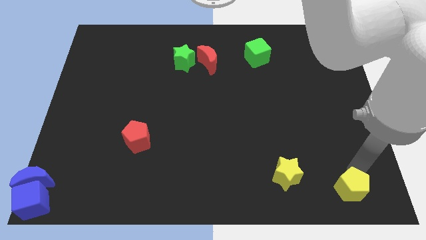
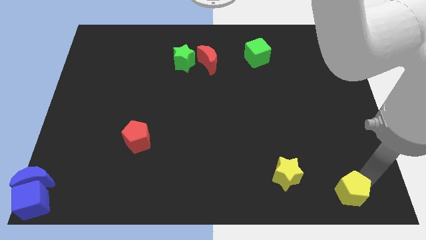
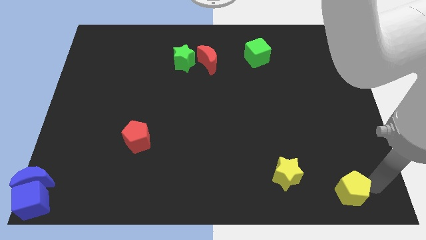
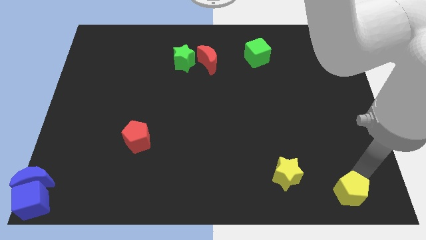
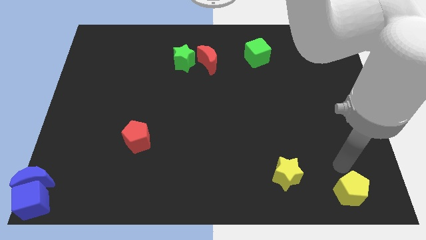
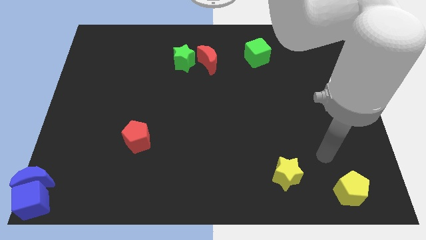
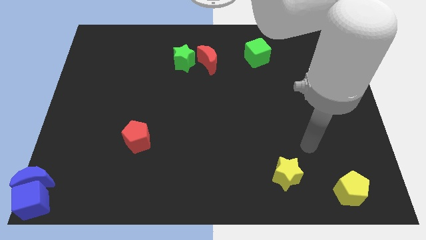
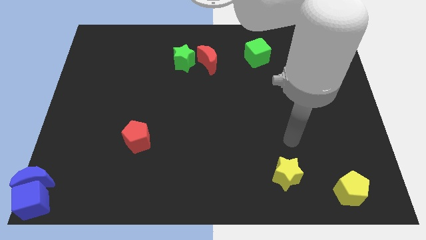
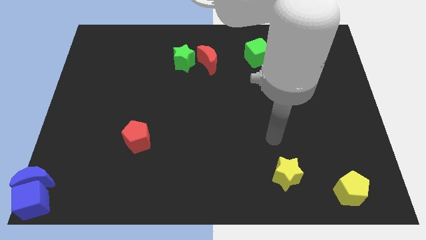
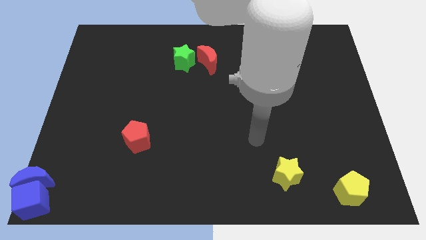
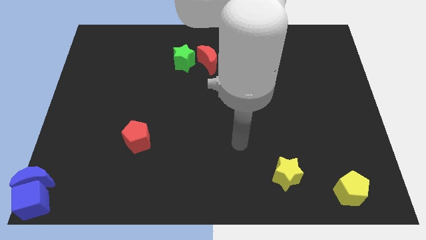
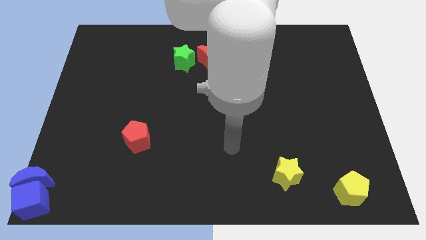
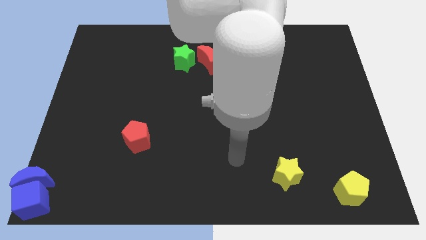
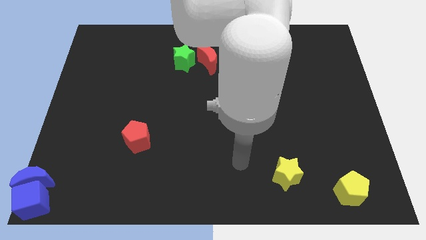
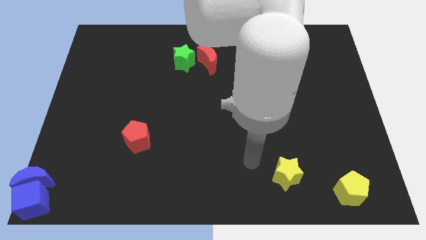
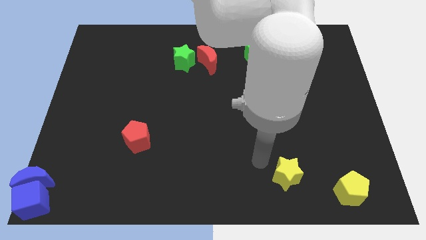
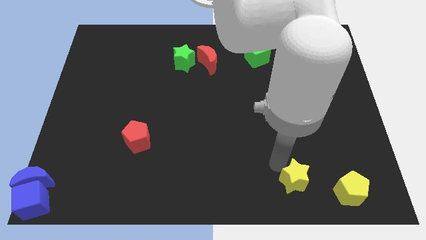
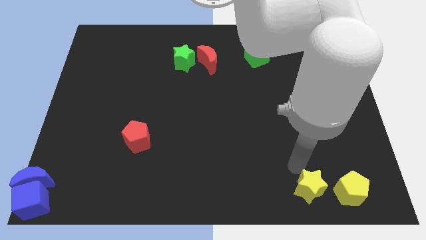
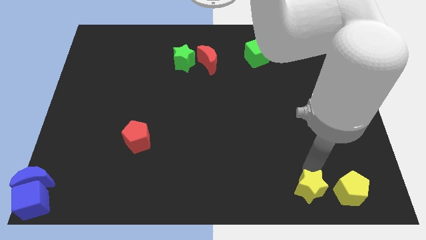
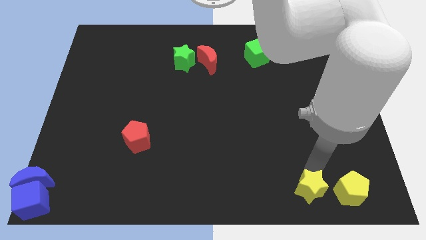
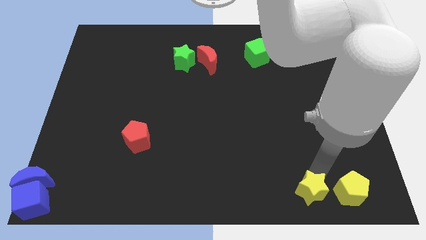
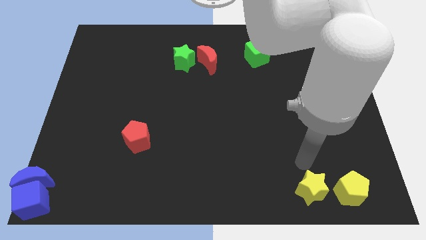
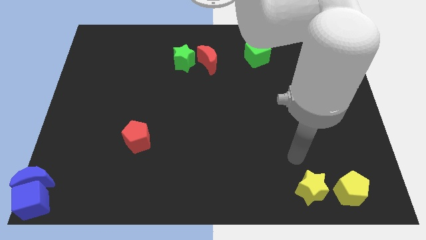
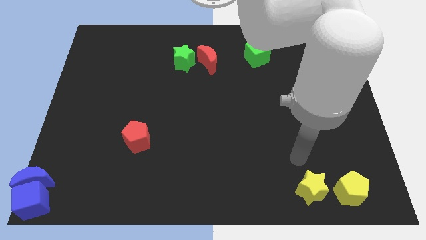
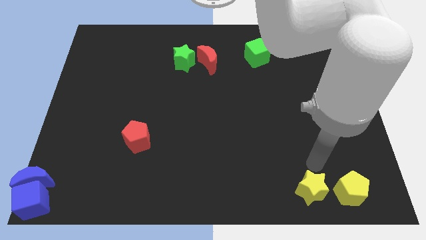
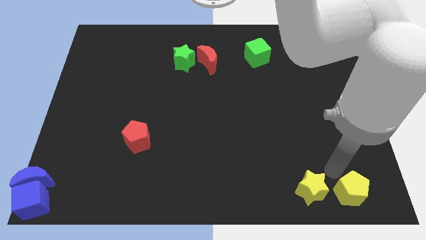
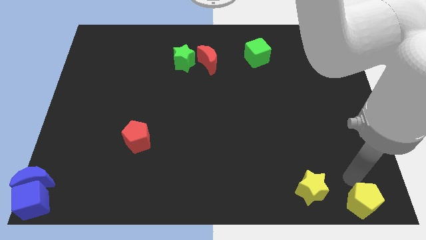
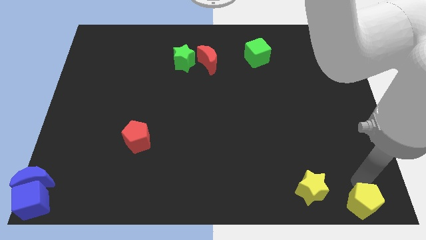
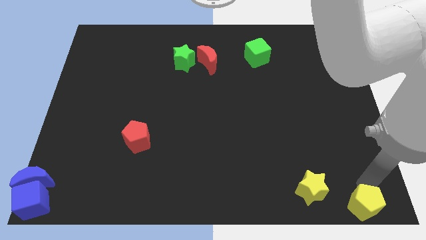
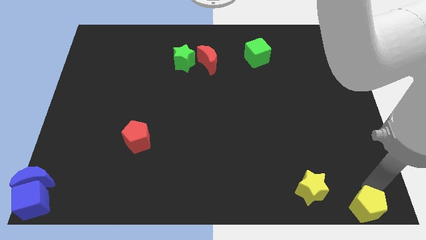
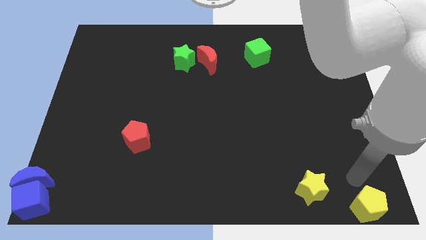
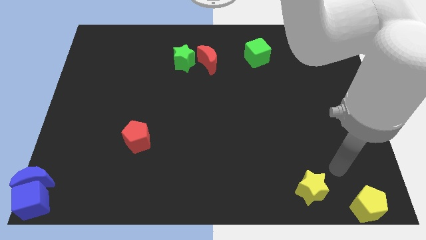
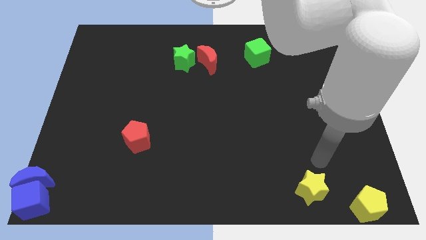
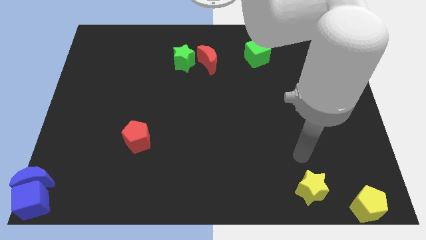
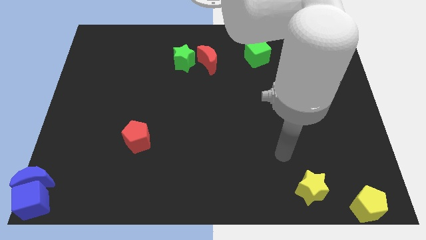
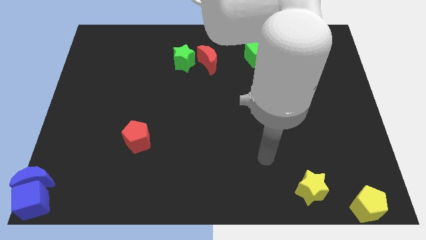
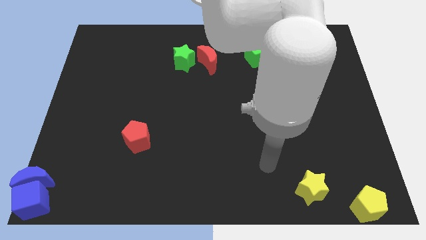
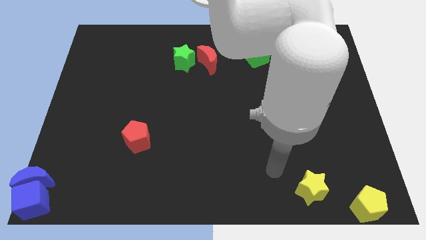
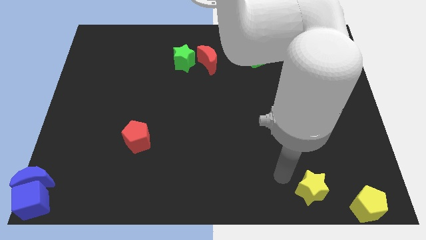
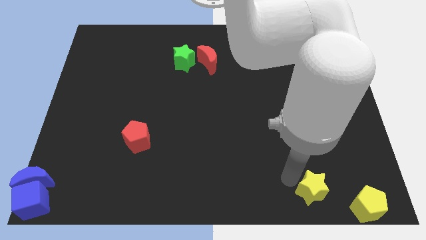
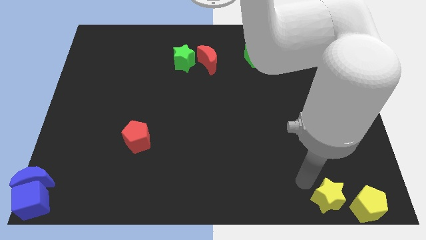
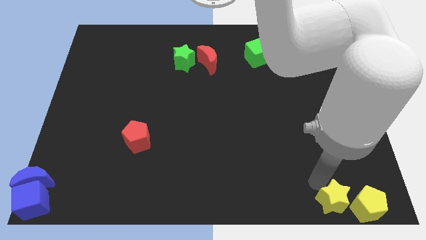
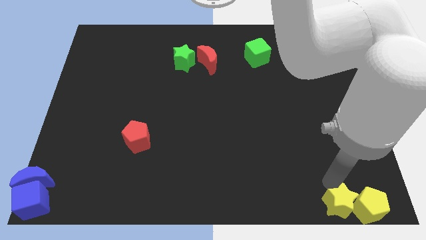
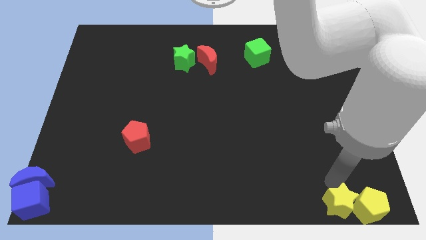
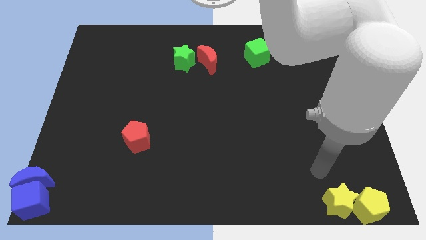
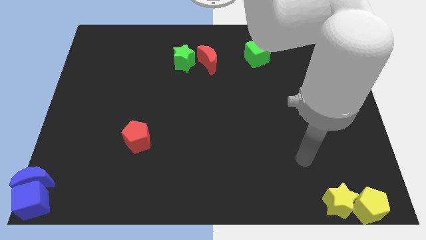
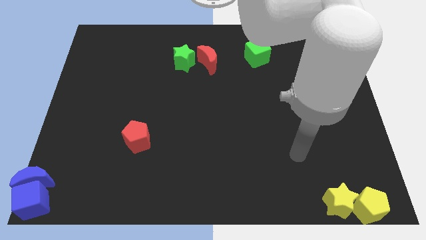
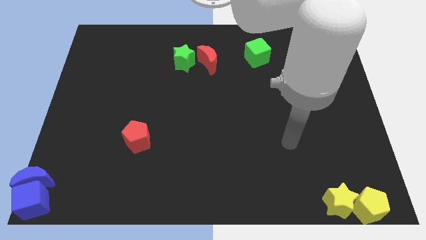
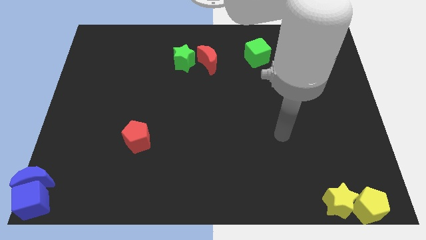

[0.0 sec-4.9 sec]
move the yellow star into the yellow pentagon

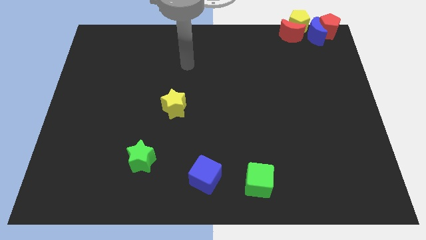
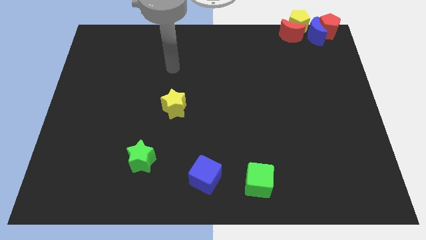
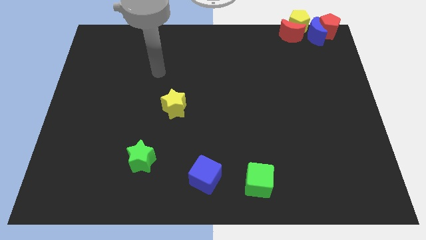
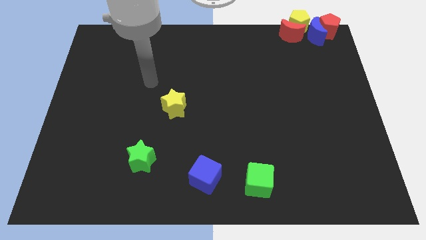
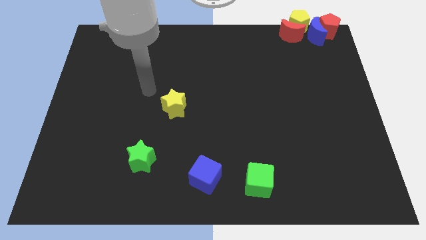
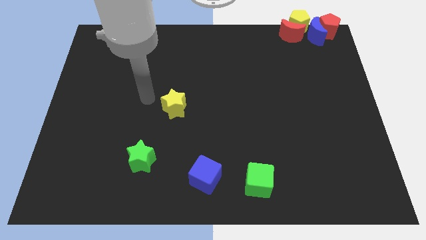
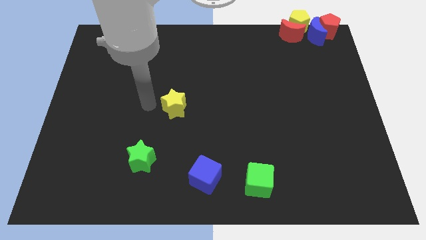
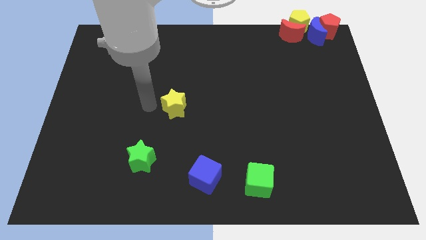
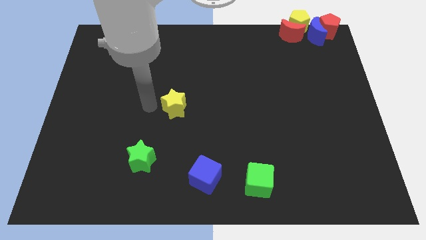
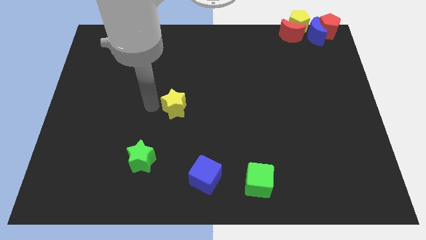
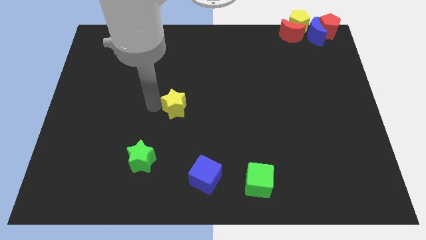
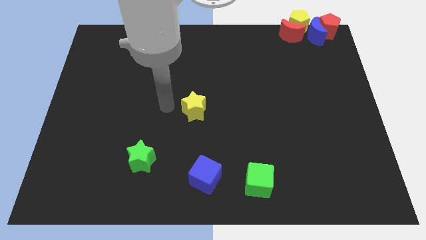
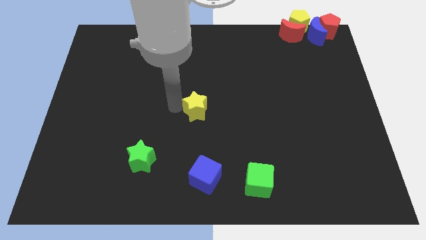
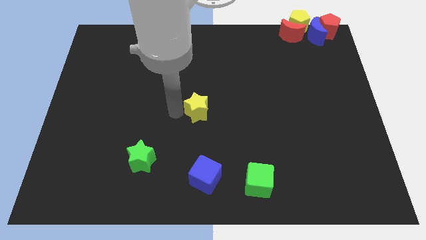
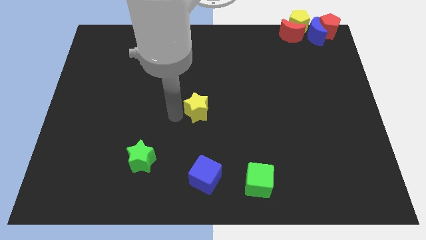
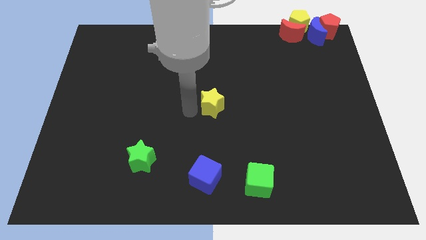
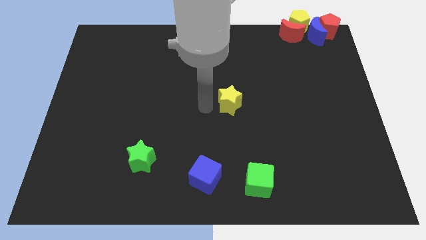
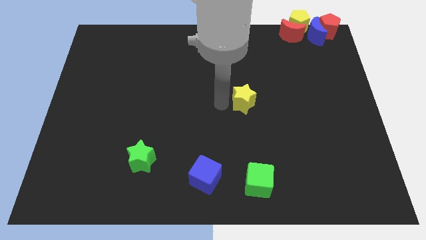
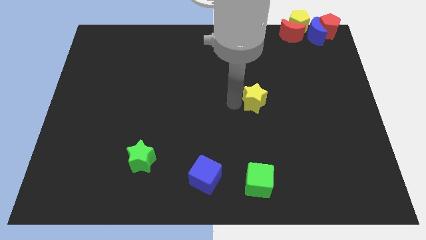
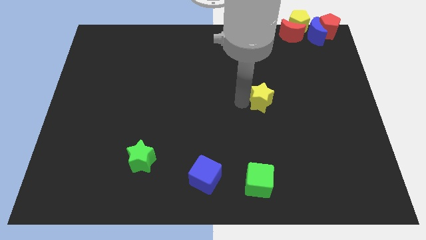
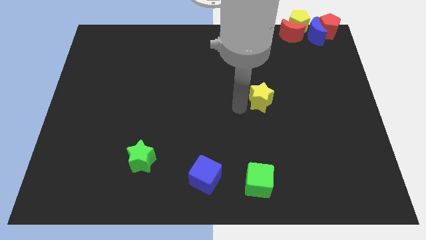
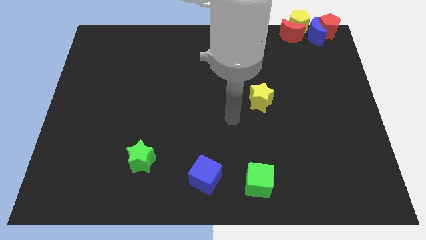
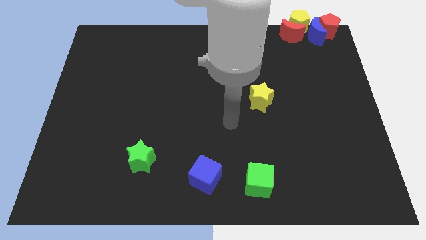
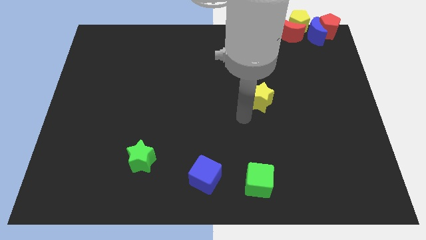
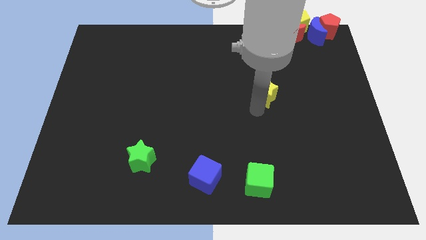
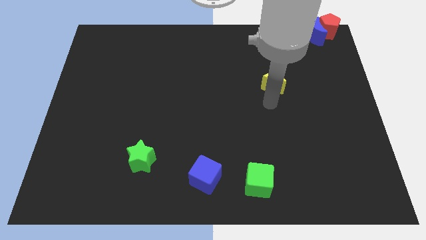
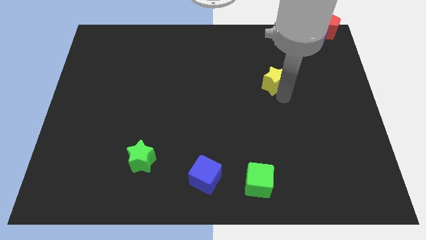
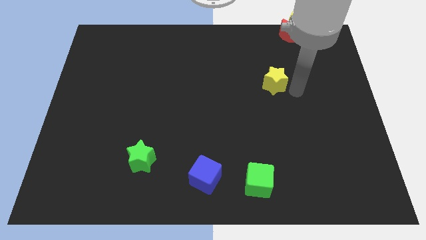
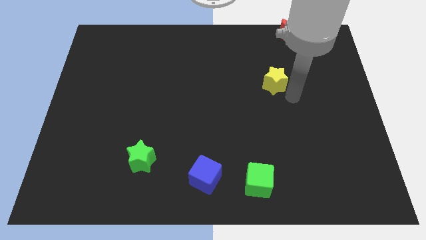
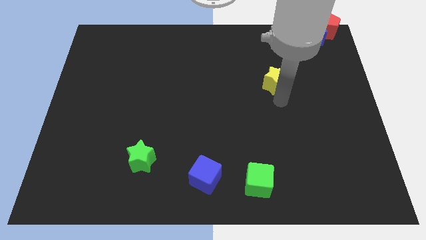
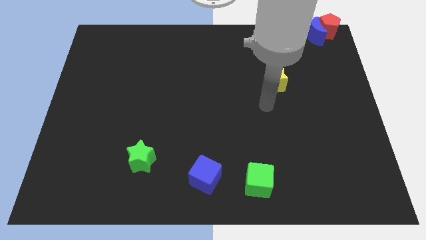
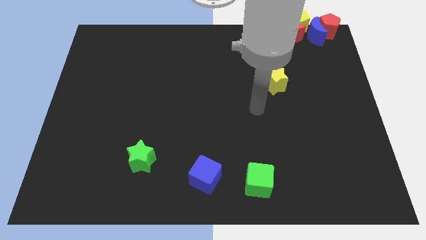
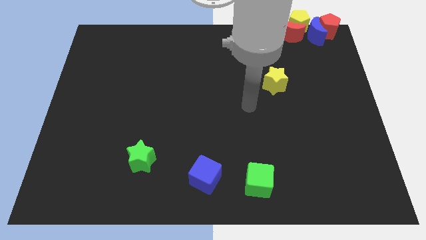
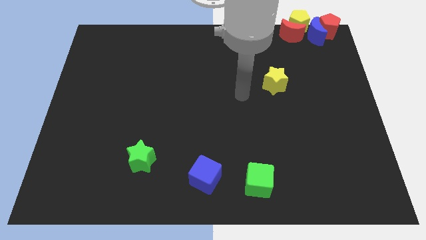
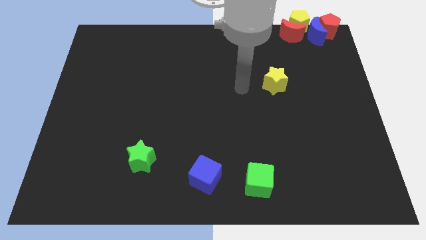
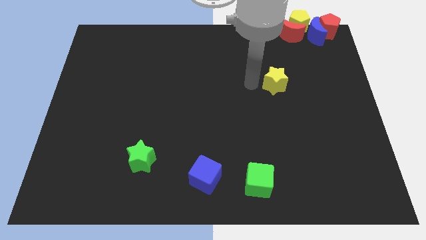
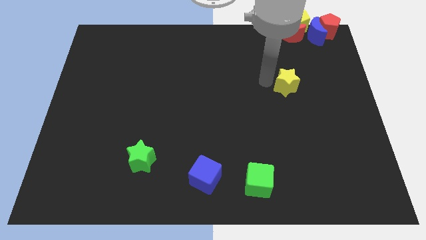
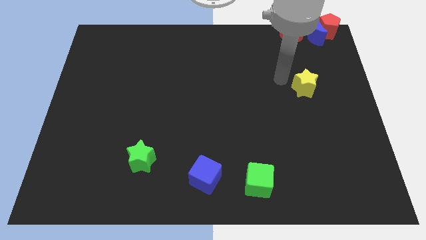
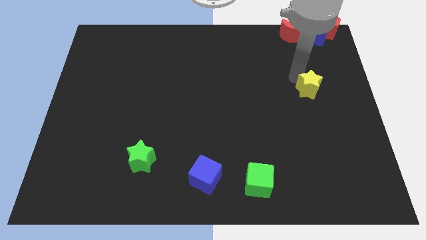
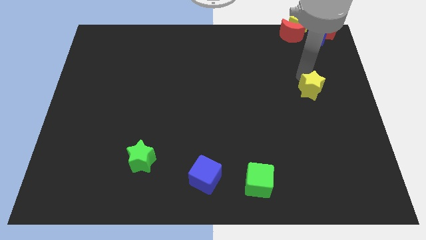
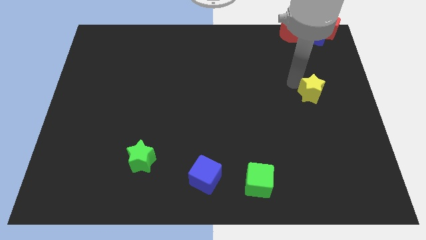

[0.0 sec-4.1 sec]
place yellow star below red moon
